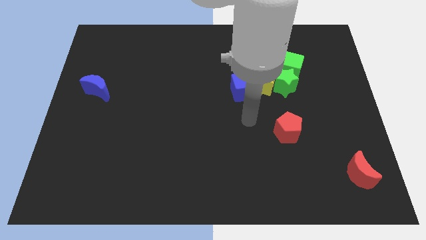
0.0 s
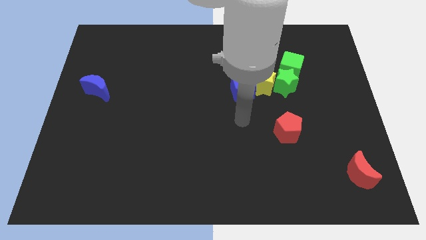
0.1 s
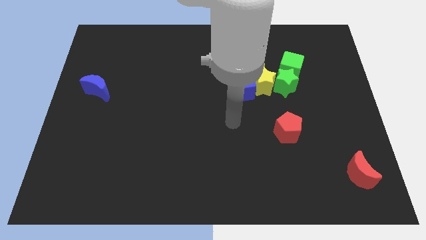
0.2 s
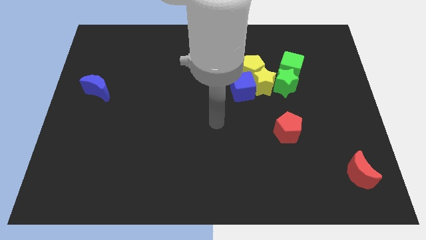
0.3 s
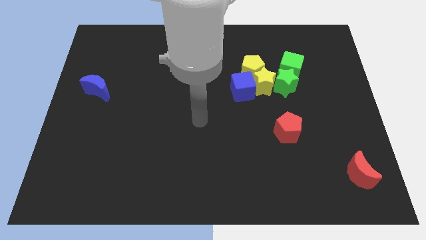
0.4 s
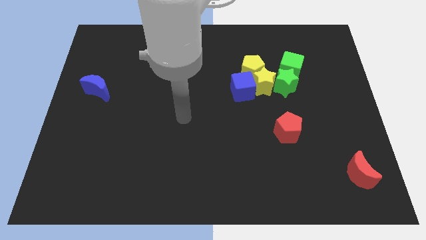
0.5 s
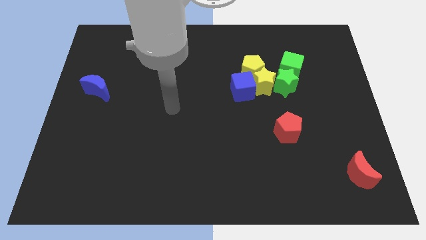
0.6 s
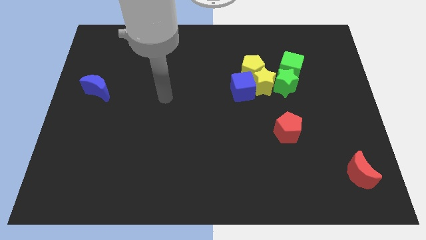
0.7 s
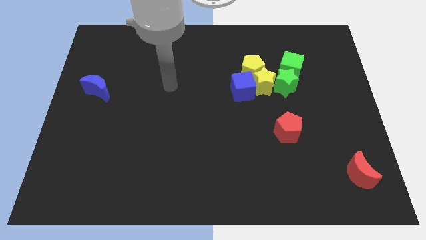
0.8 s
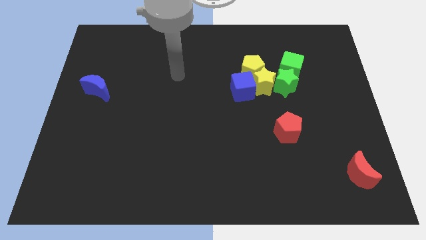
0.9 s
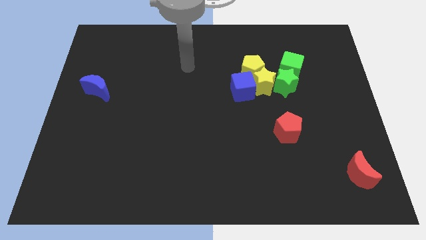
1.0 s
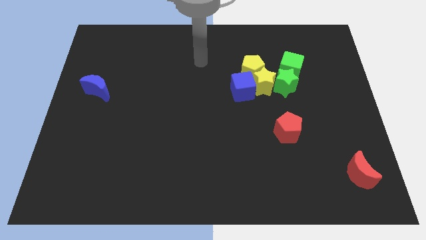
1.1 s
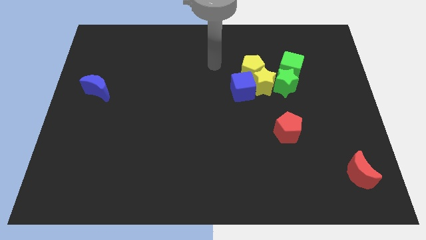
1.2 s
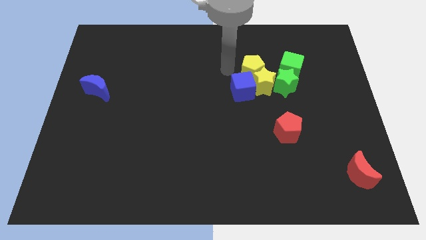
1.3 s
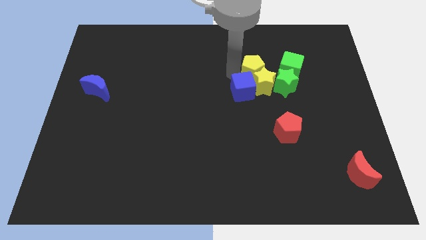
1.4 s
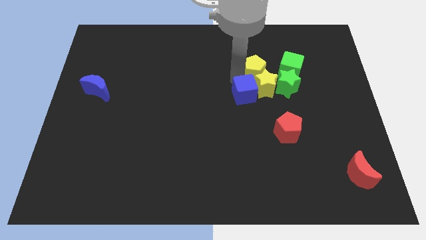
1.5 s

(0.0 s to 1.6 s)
move your arm to the top of blue cube

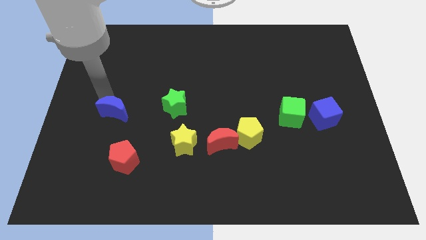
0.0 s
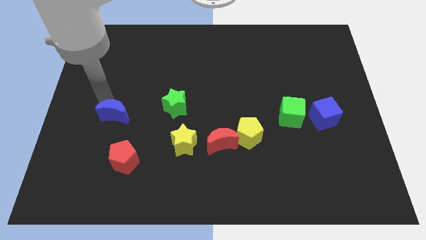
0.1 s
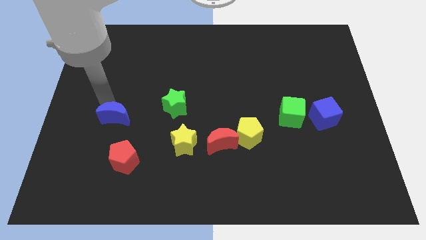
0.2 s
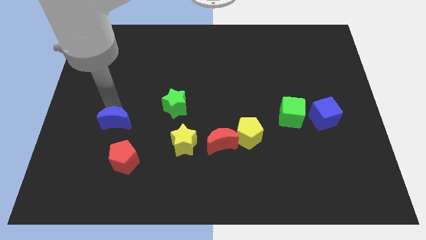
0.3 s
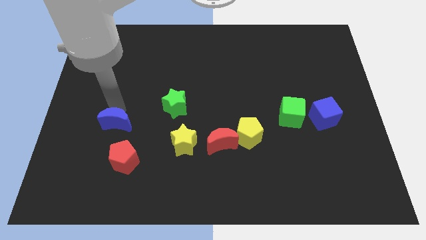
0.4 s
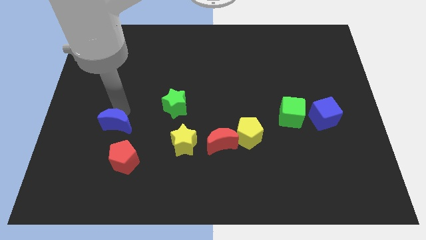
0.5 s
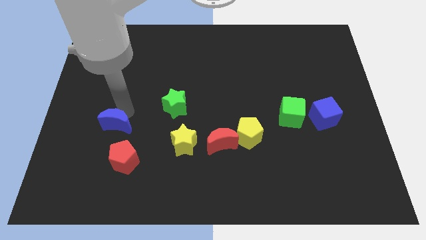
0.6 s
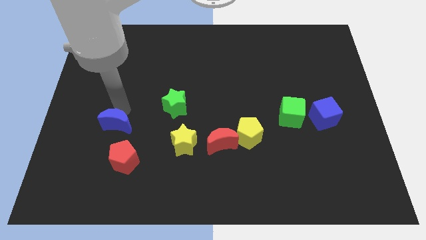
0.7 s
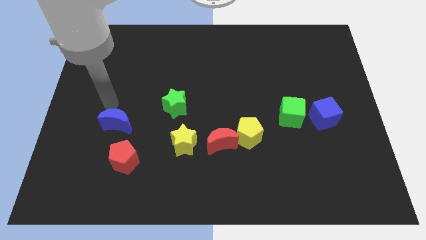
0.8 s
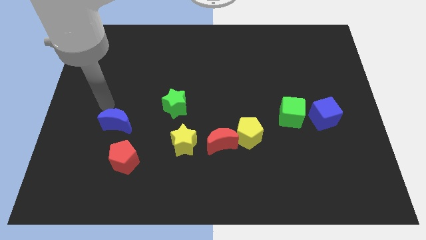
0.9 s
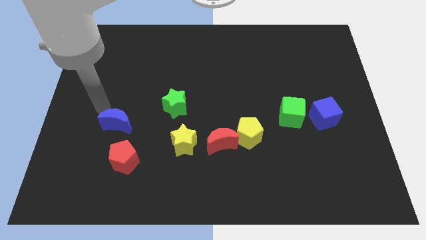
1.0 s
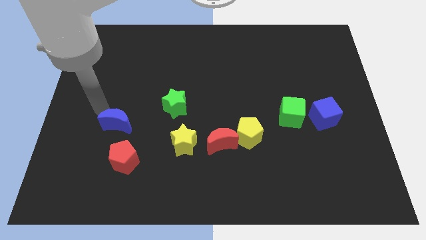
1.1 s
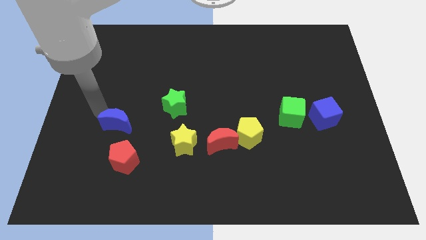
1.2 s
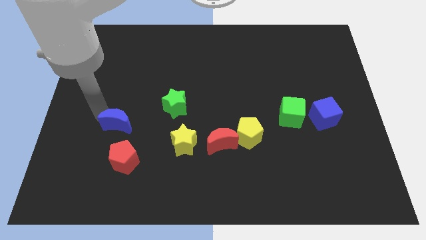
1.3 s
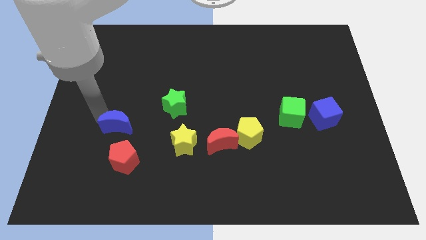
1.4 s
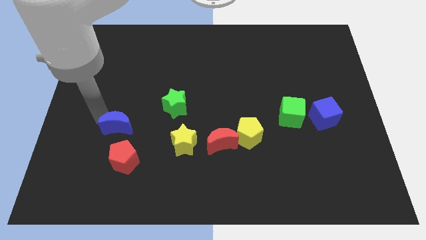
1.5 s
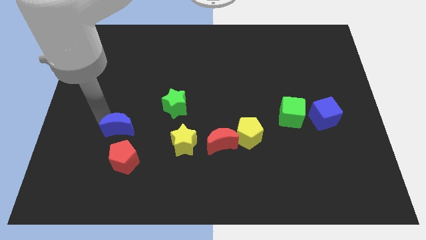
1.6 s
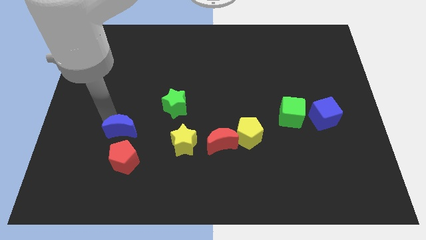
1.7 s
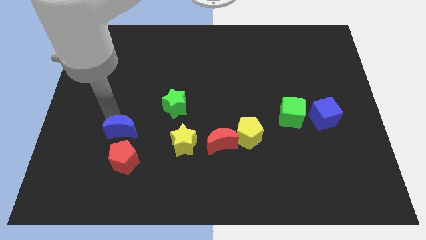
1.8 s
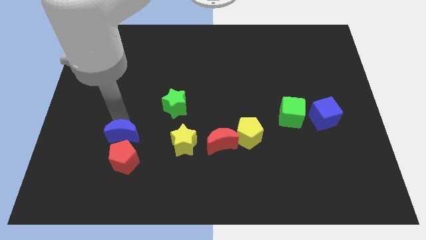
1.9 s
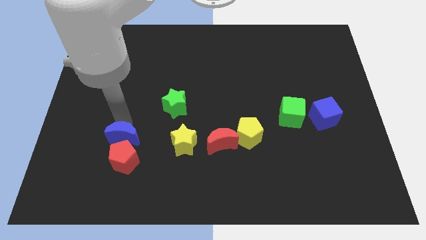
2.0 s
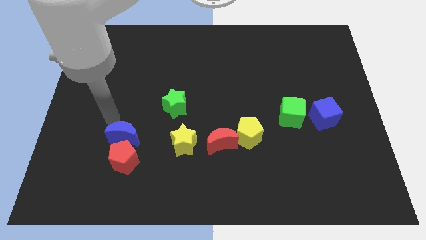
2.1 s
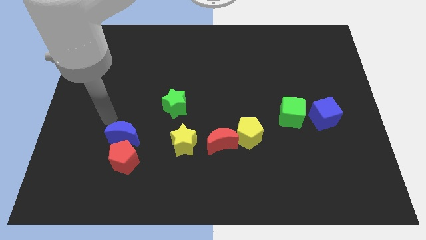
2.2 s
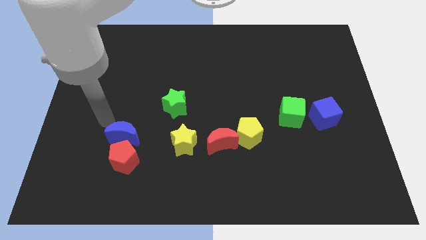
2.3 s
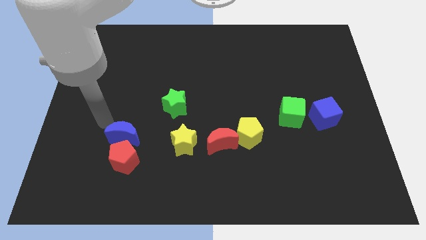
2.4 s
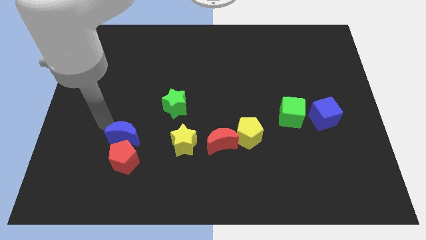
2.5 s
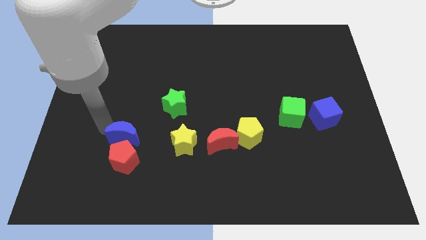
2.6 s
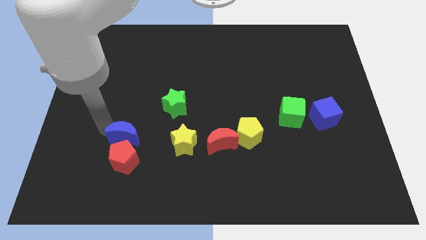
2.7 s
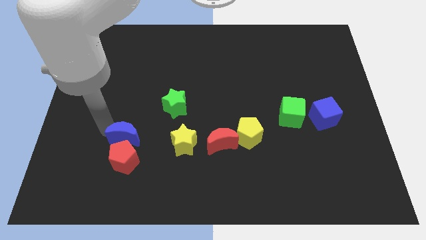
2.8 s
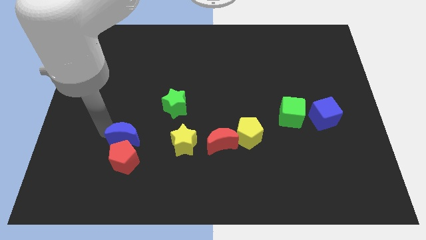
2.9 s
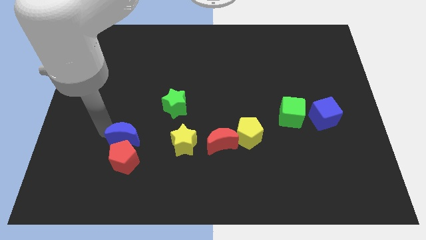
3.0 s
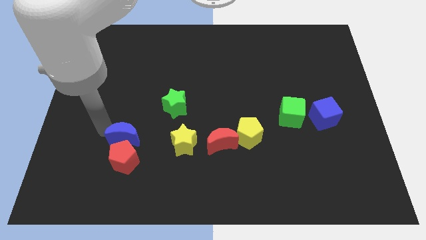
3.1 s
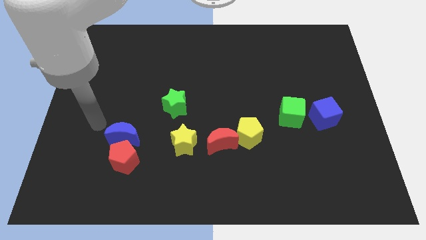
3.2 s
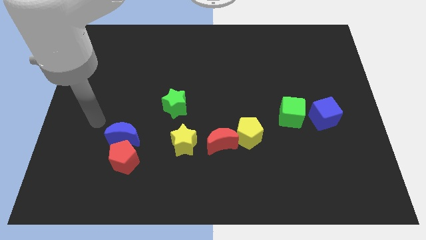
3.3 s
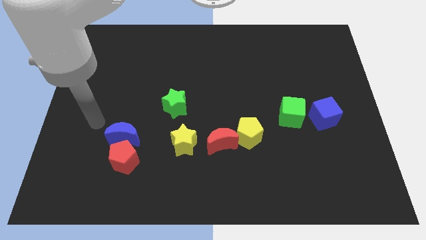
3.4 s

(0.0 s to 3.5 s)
push the blue crescent into the red pentagon

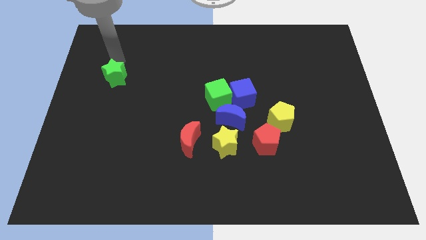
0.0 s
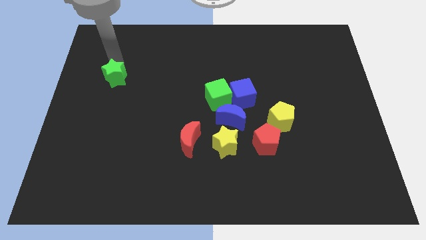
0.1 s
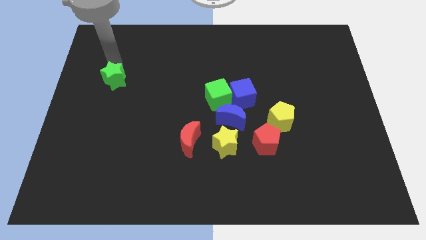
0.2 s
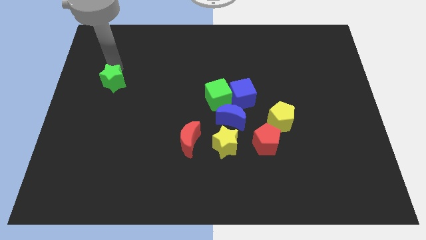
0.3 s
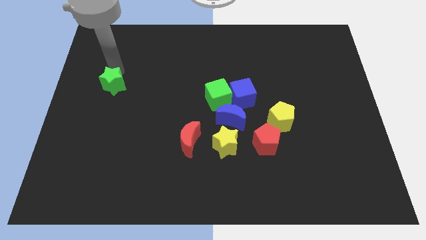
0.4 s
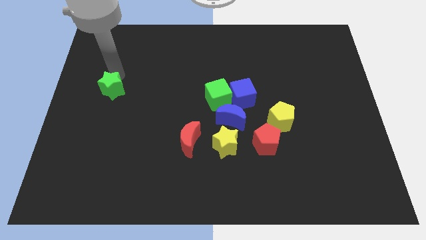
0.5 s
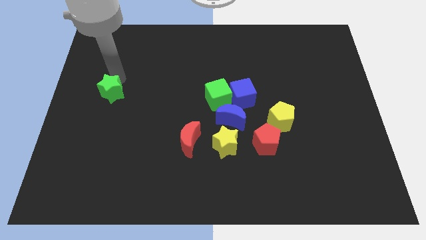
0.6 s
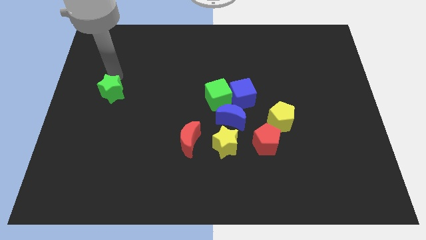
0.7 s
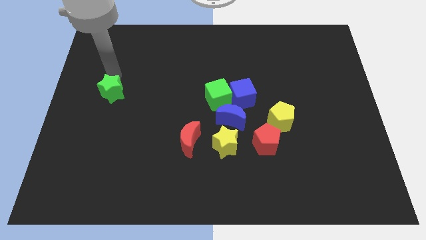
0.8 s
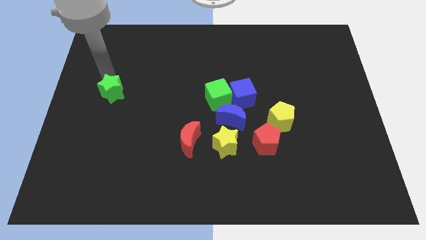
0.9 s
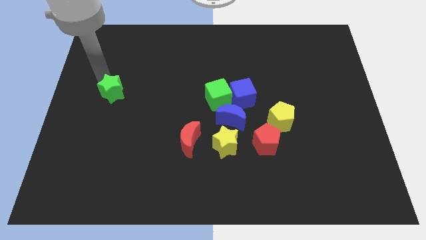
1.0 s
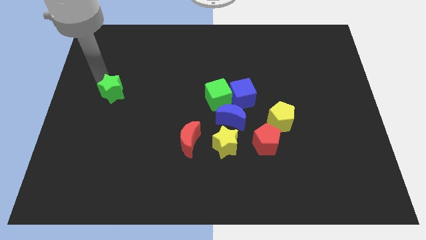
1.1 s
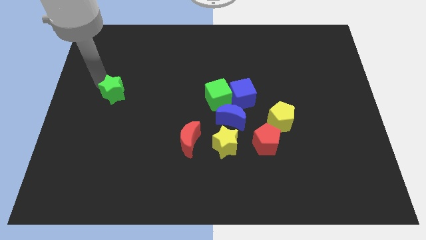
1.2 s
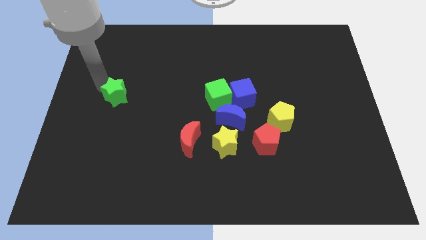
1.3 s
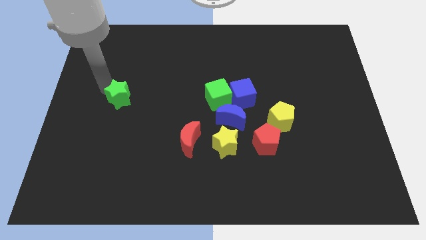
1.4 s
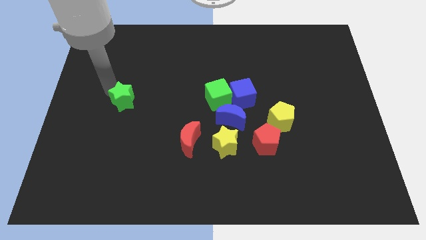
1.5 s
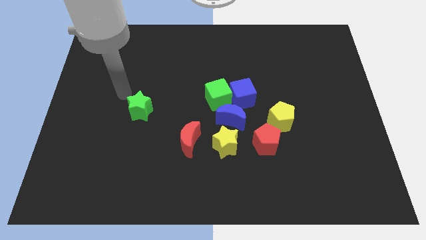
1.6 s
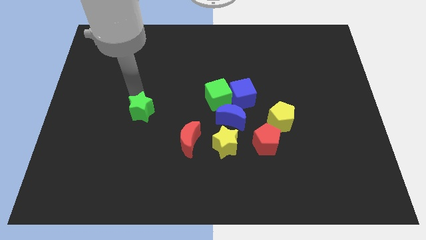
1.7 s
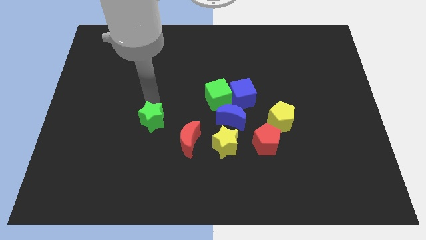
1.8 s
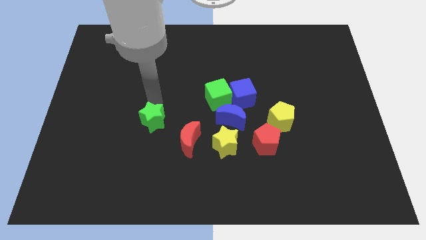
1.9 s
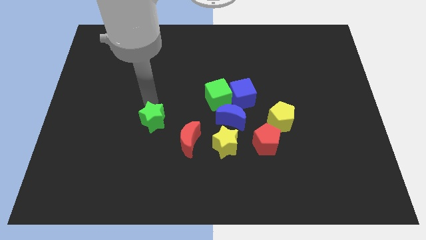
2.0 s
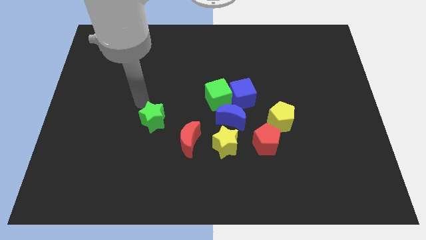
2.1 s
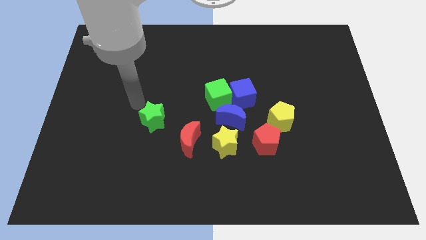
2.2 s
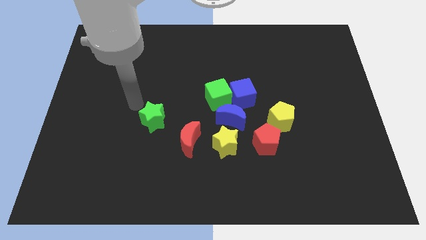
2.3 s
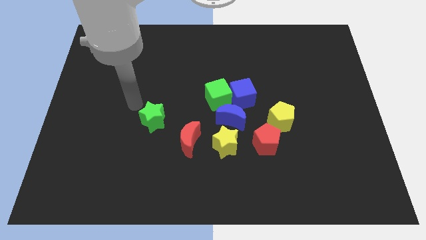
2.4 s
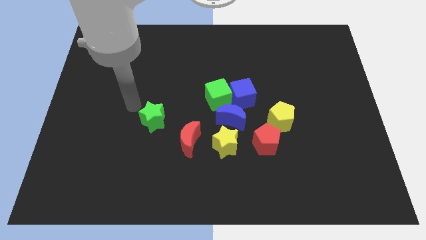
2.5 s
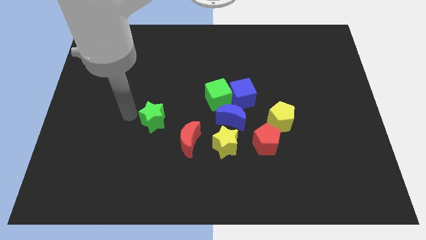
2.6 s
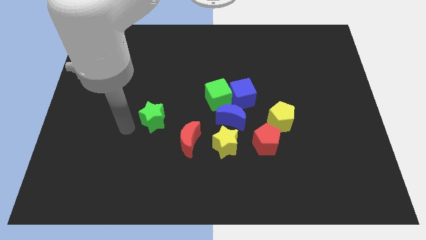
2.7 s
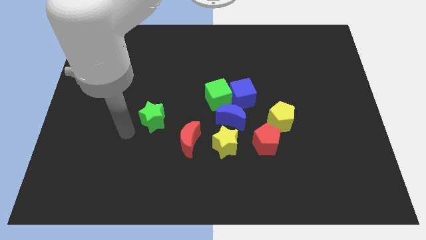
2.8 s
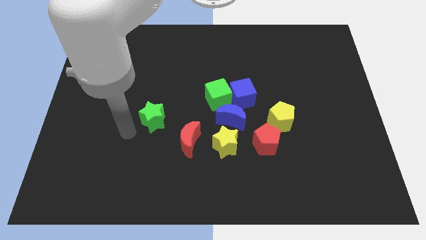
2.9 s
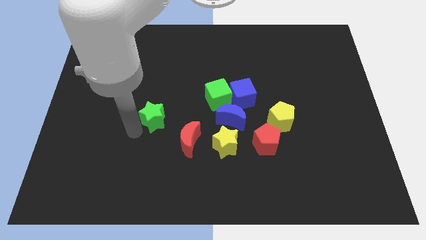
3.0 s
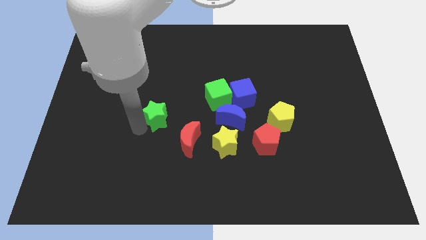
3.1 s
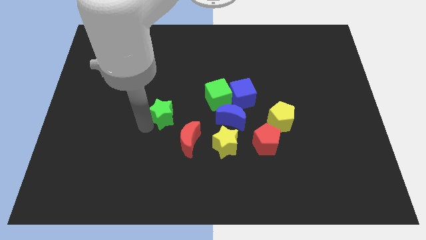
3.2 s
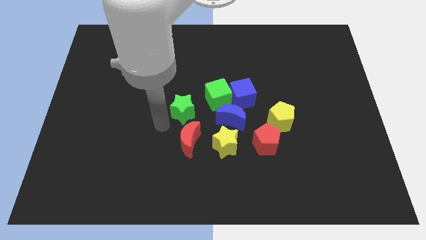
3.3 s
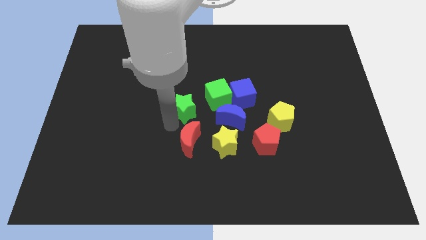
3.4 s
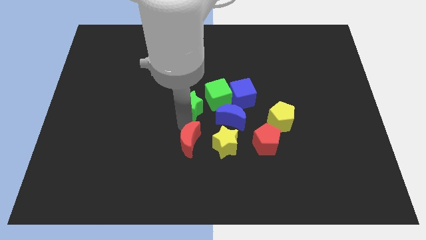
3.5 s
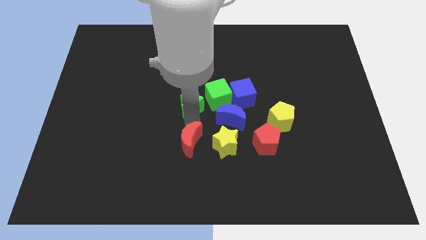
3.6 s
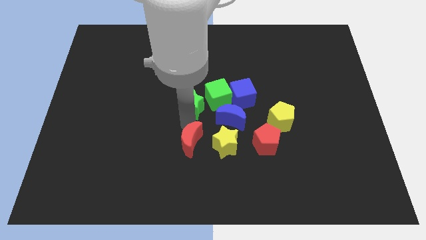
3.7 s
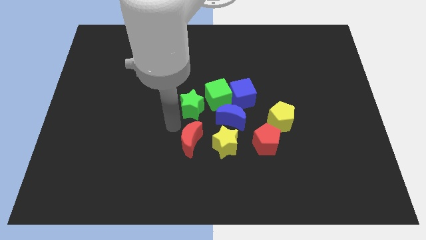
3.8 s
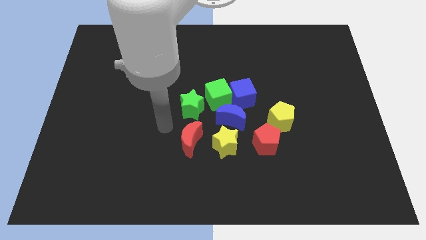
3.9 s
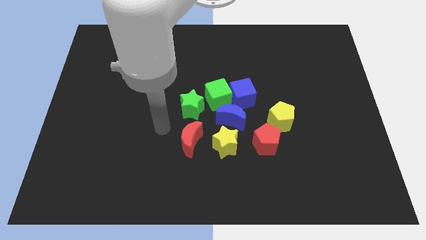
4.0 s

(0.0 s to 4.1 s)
drag green star beside green cube
